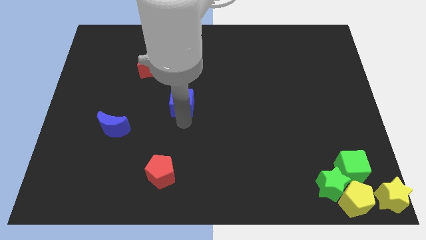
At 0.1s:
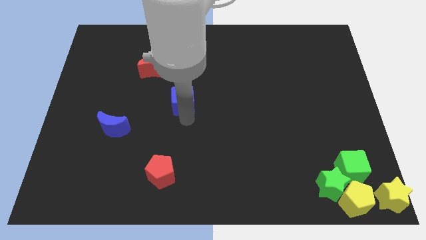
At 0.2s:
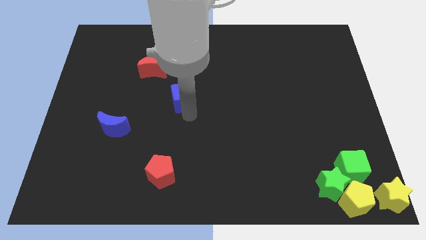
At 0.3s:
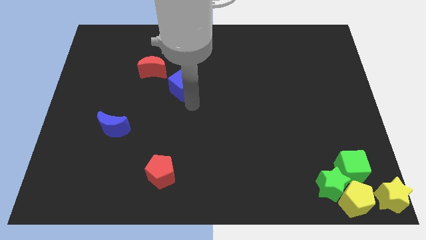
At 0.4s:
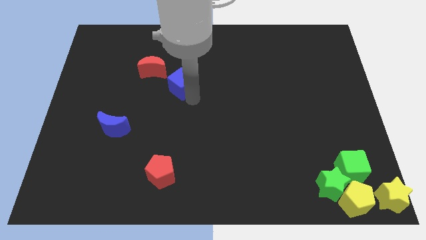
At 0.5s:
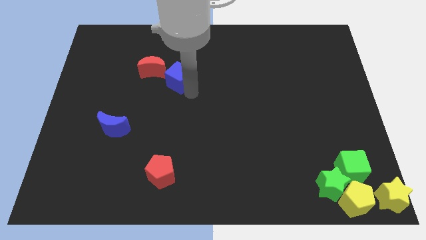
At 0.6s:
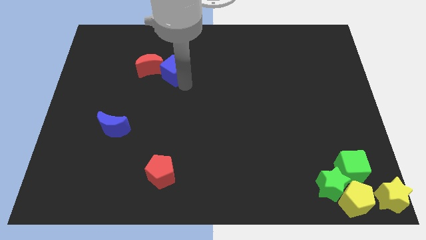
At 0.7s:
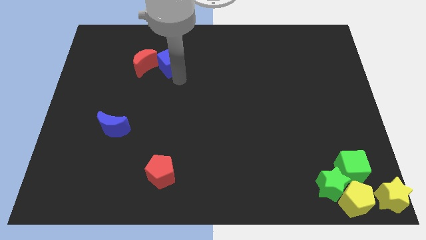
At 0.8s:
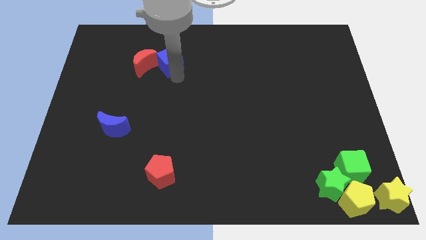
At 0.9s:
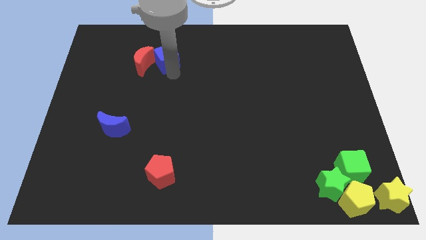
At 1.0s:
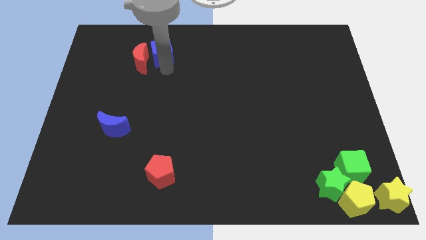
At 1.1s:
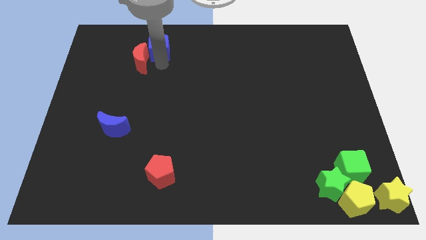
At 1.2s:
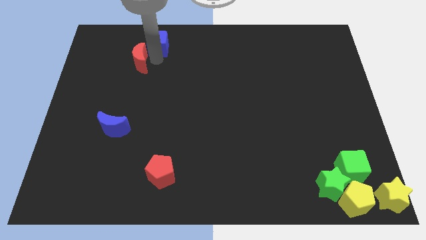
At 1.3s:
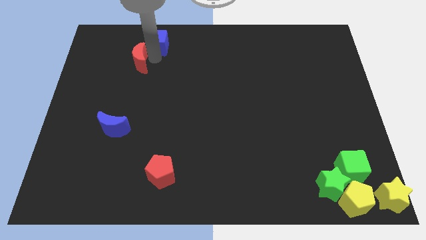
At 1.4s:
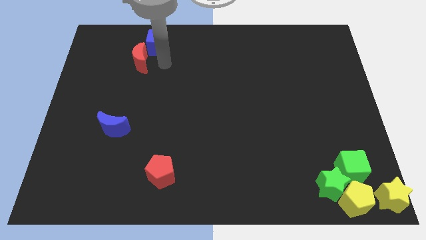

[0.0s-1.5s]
push the blue cube to the top right side of the red crescent

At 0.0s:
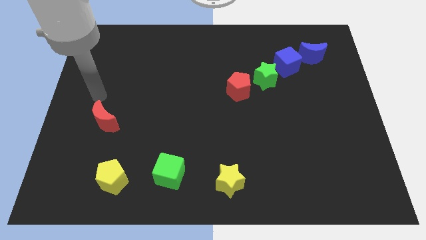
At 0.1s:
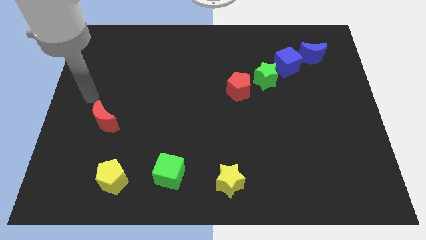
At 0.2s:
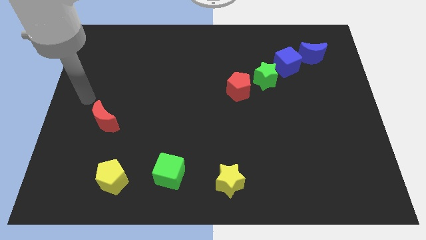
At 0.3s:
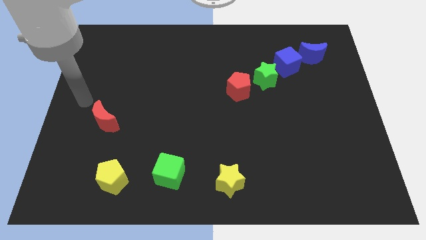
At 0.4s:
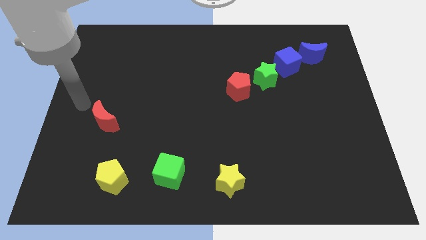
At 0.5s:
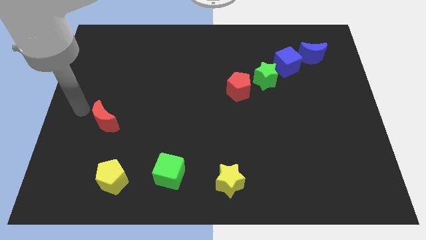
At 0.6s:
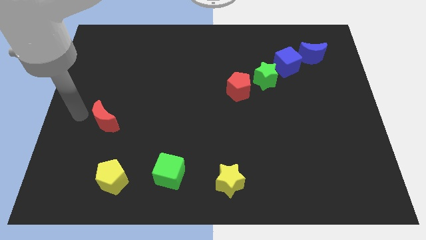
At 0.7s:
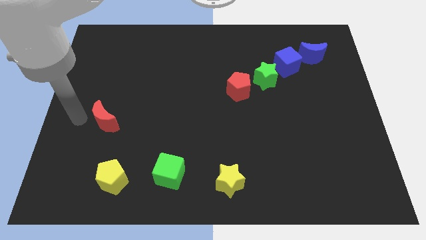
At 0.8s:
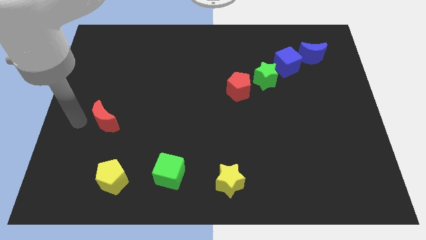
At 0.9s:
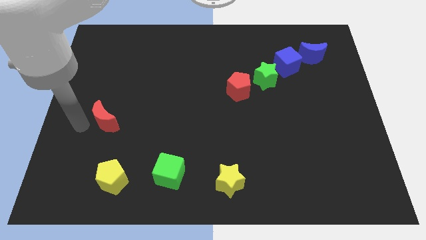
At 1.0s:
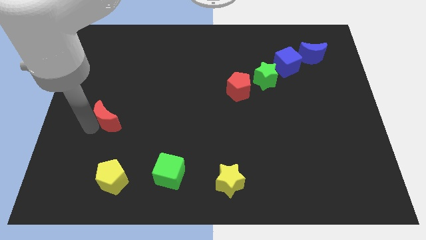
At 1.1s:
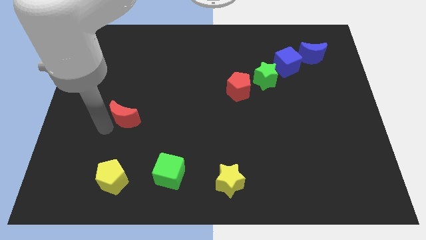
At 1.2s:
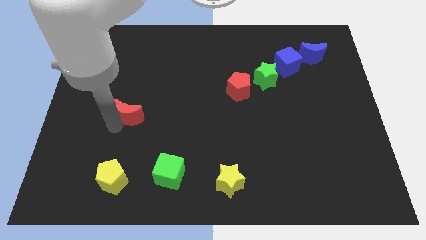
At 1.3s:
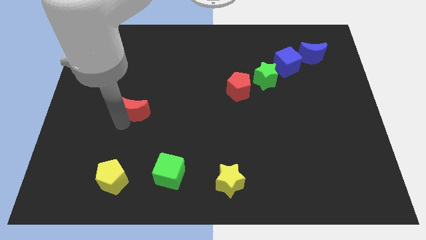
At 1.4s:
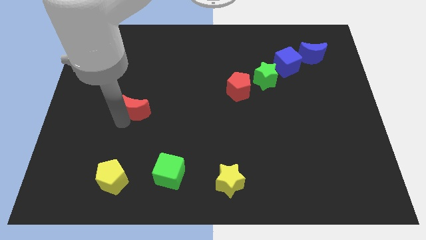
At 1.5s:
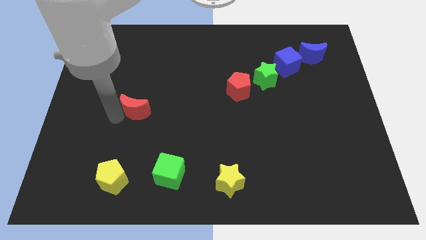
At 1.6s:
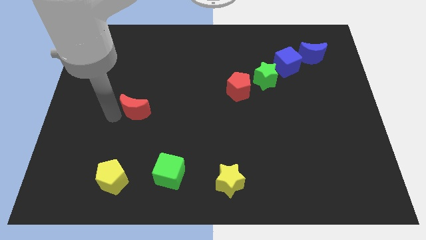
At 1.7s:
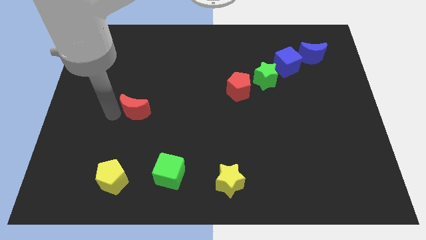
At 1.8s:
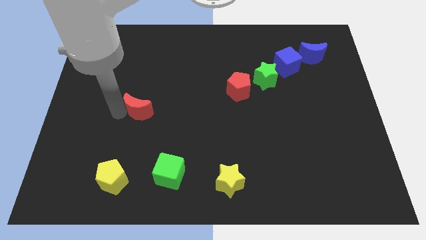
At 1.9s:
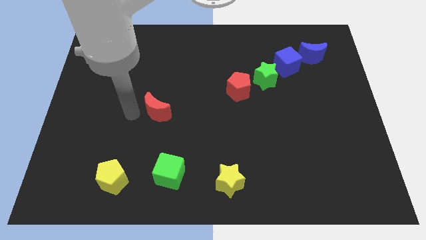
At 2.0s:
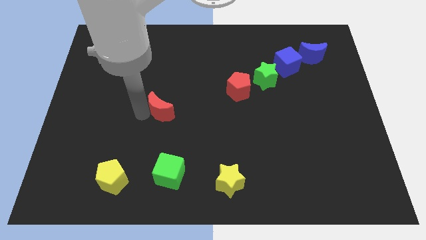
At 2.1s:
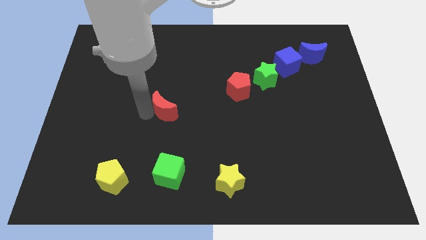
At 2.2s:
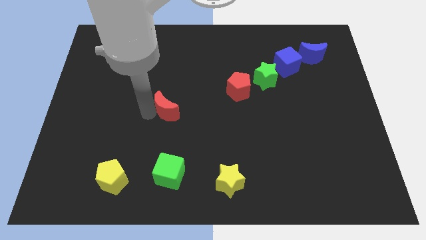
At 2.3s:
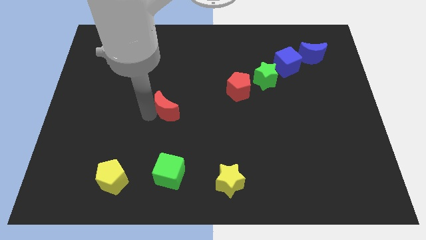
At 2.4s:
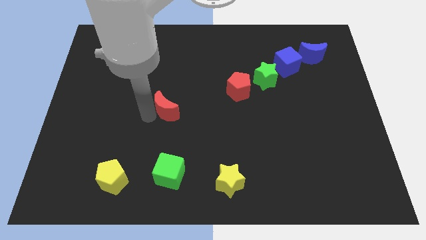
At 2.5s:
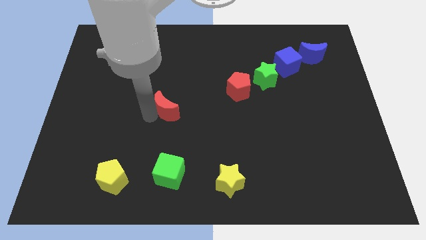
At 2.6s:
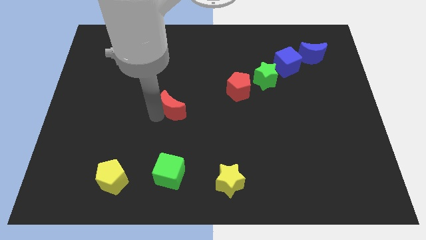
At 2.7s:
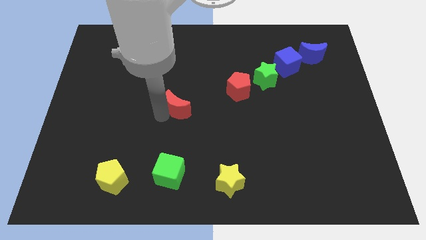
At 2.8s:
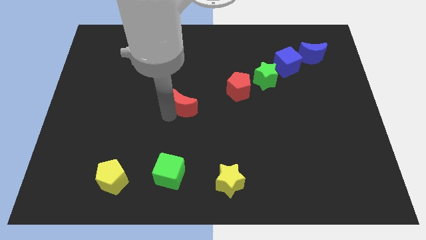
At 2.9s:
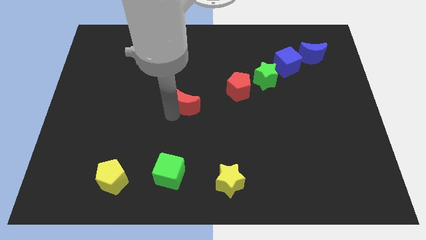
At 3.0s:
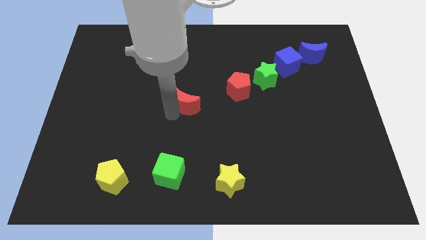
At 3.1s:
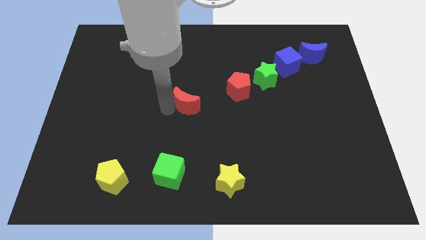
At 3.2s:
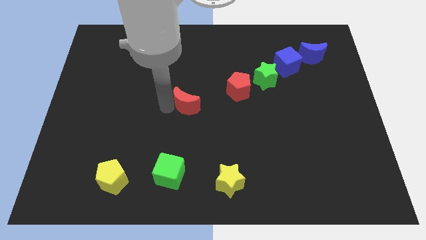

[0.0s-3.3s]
push the red moon to the center right

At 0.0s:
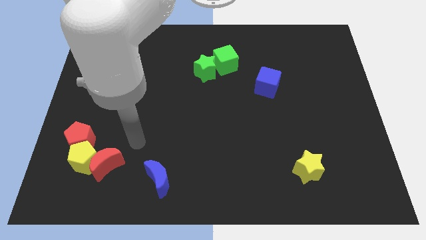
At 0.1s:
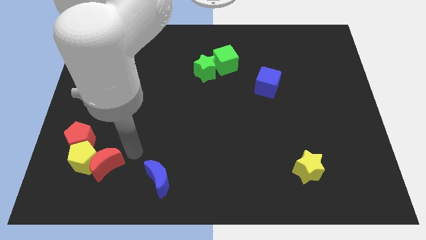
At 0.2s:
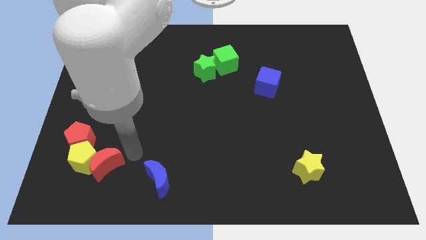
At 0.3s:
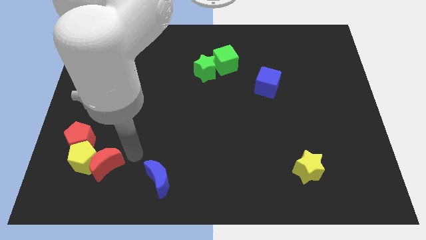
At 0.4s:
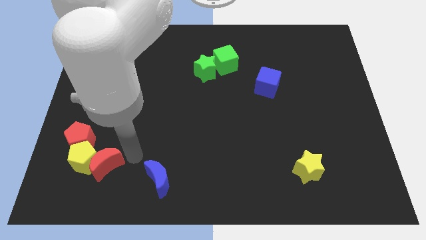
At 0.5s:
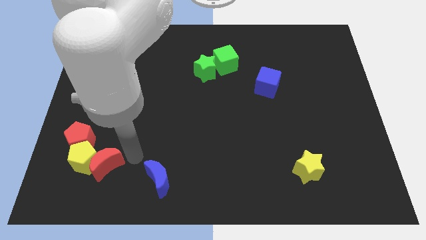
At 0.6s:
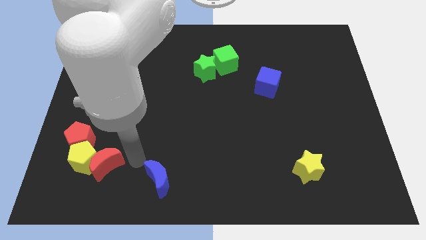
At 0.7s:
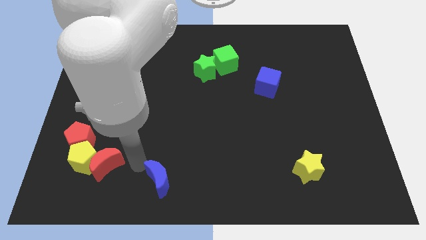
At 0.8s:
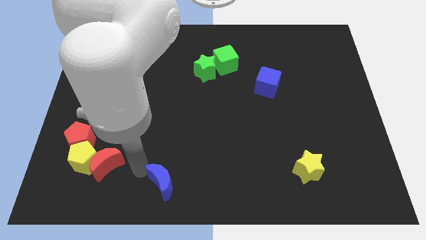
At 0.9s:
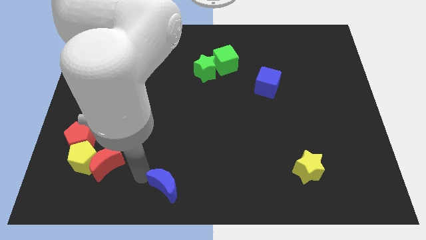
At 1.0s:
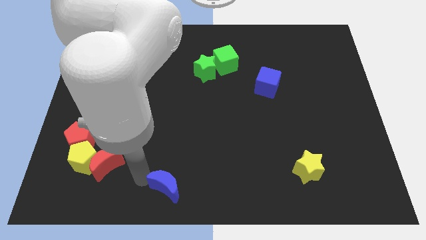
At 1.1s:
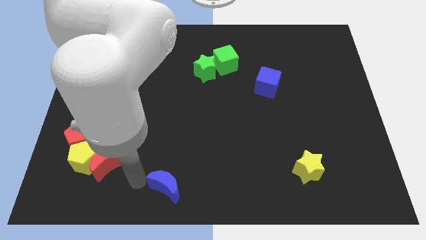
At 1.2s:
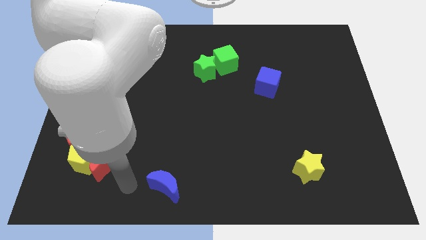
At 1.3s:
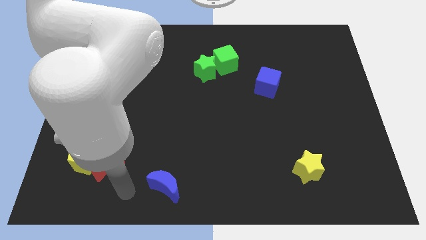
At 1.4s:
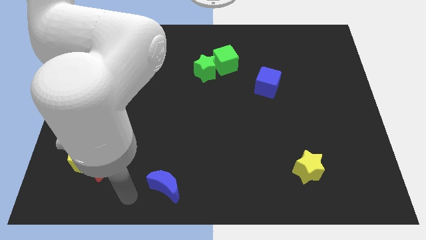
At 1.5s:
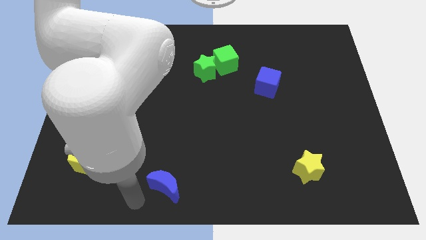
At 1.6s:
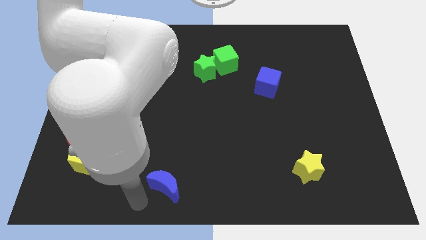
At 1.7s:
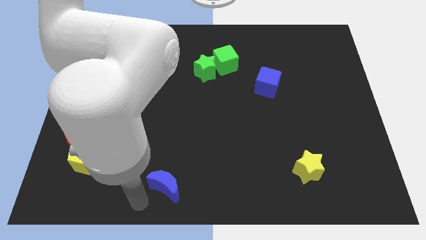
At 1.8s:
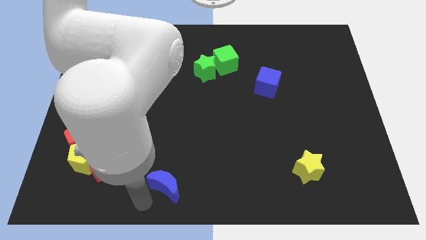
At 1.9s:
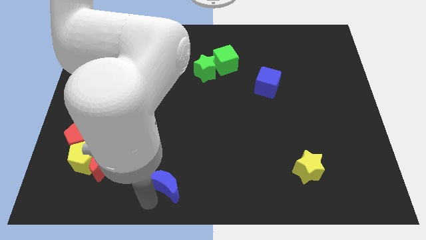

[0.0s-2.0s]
place your arm below blue moon

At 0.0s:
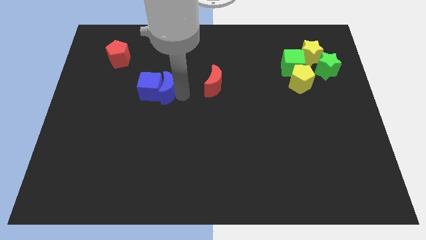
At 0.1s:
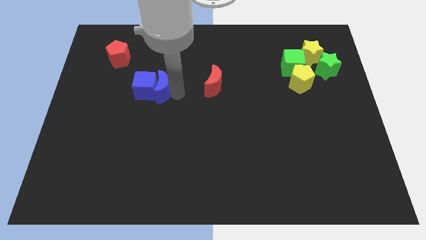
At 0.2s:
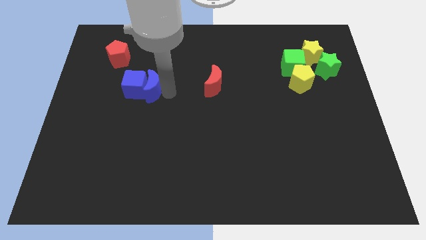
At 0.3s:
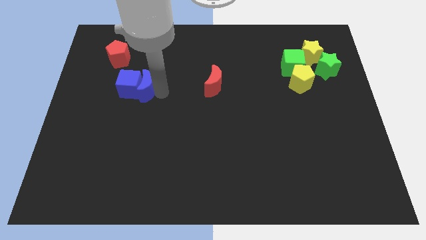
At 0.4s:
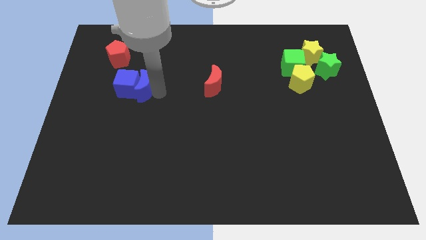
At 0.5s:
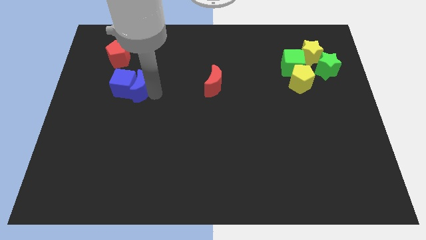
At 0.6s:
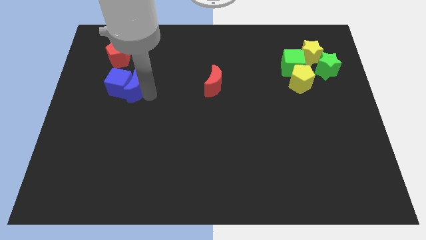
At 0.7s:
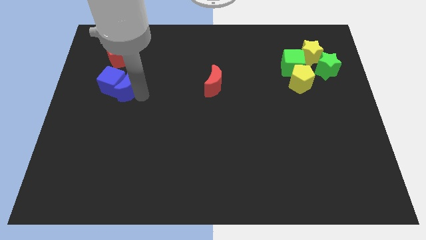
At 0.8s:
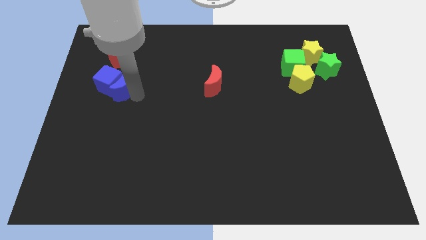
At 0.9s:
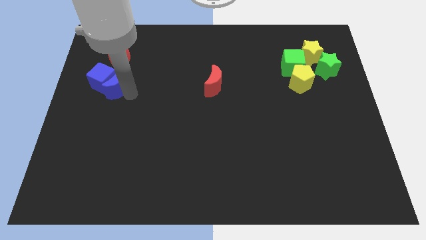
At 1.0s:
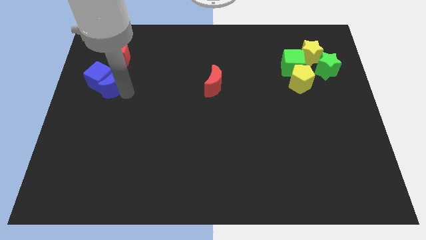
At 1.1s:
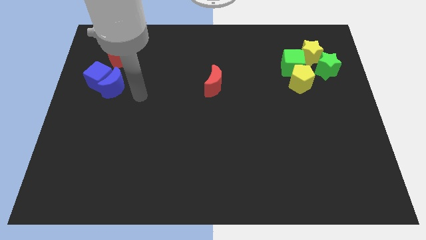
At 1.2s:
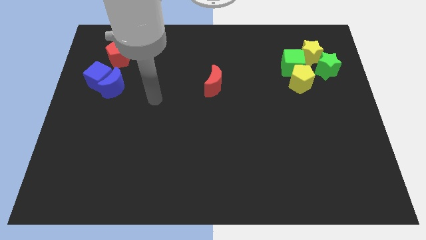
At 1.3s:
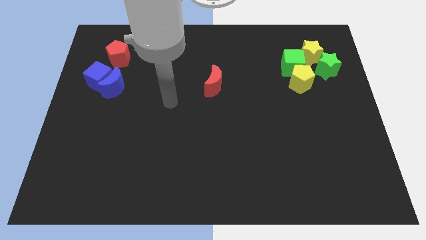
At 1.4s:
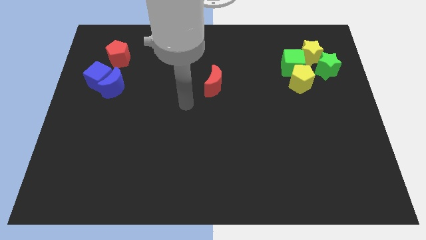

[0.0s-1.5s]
move the group of blue blocks to the left

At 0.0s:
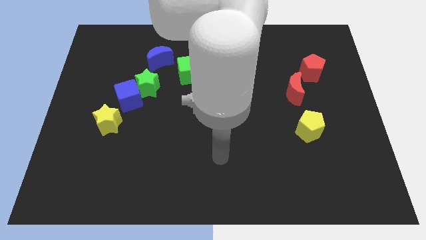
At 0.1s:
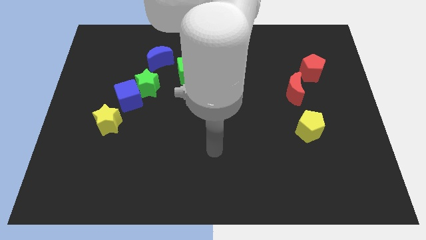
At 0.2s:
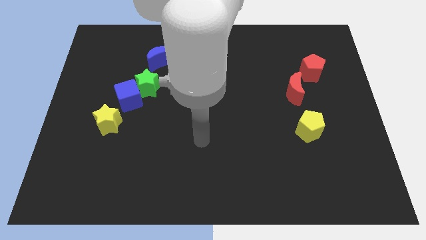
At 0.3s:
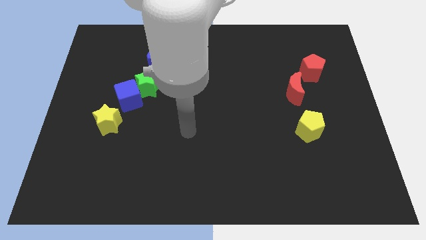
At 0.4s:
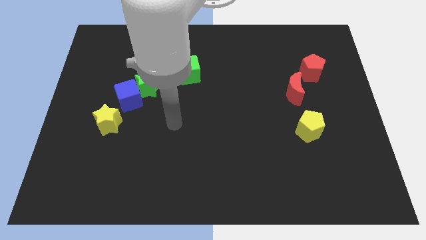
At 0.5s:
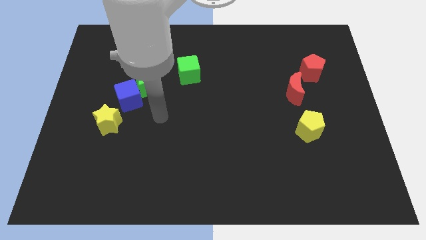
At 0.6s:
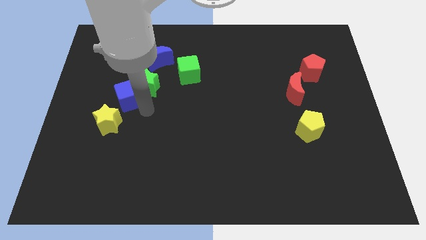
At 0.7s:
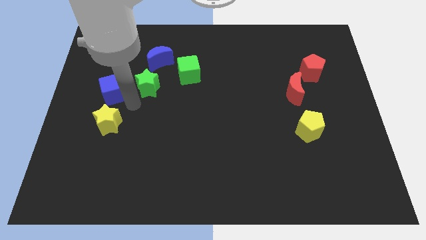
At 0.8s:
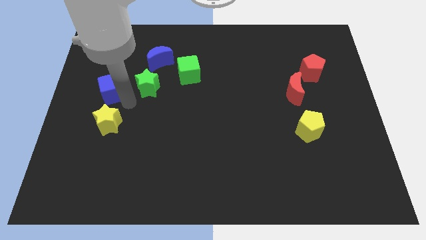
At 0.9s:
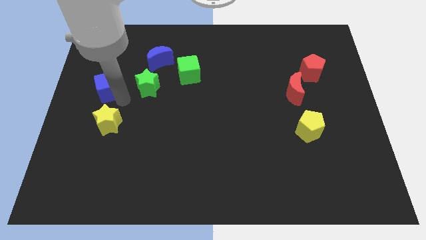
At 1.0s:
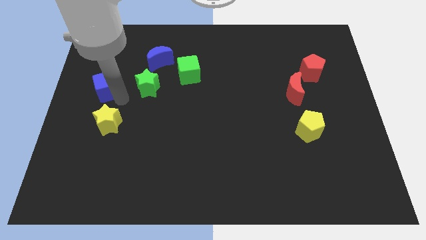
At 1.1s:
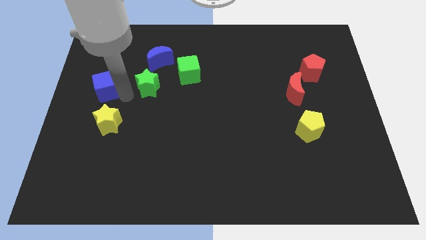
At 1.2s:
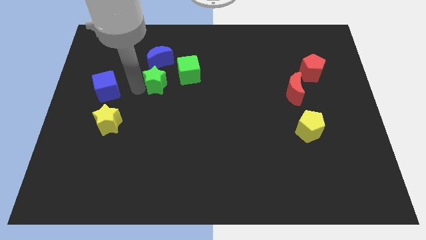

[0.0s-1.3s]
push the blue cube slightly to the left
